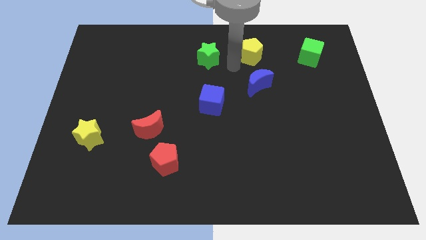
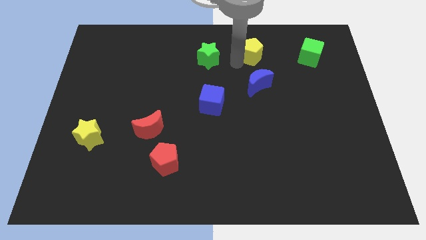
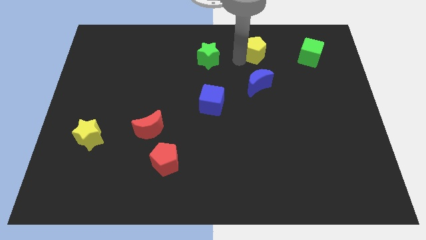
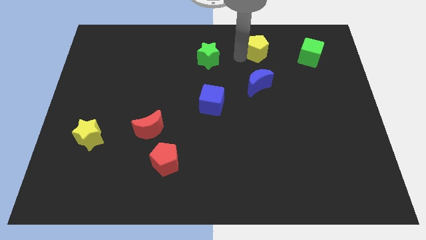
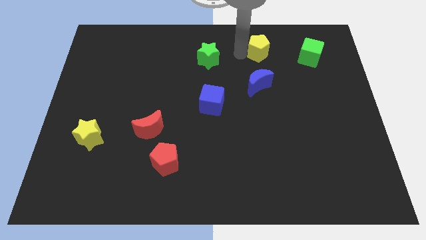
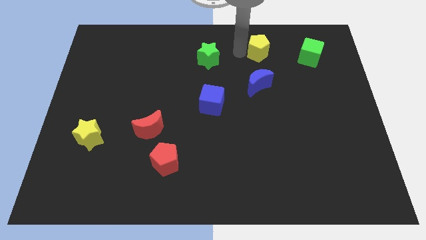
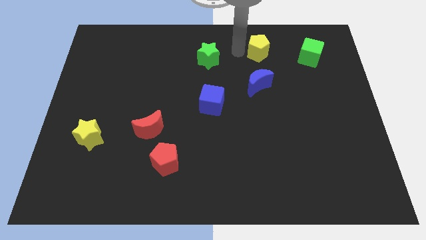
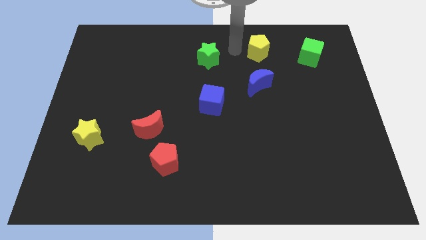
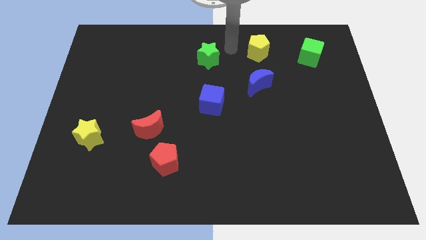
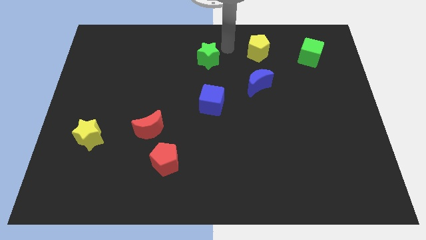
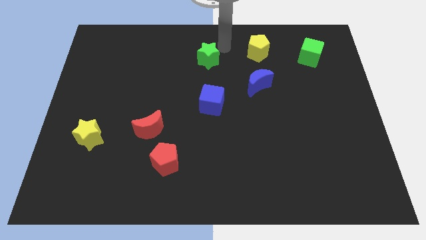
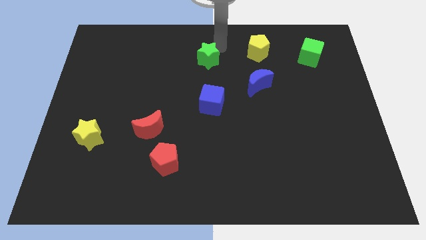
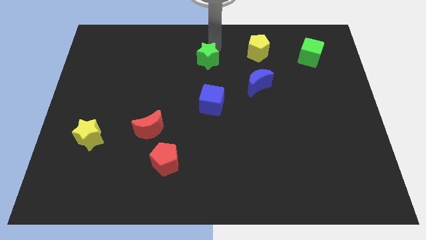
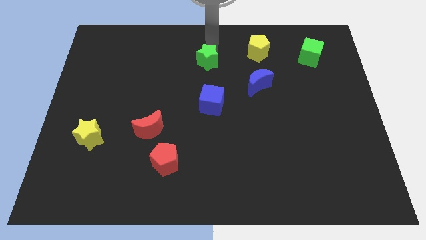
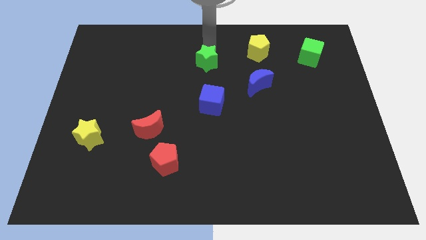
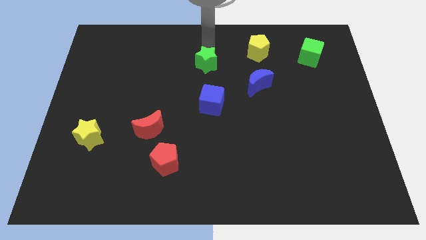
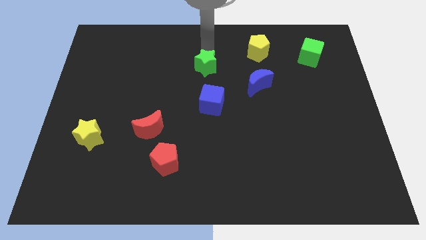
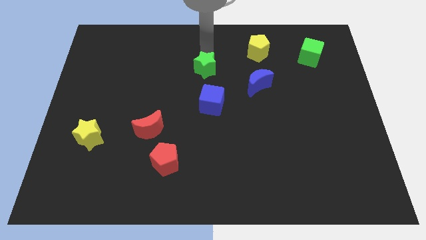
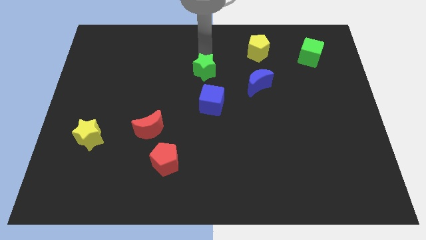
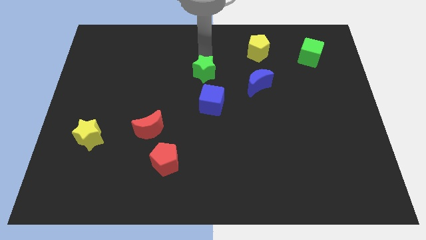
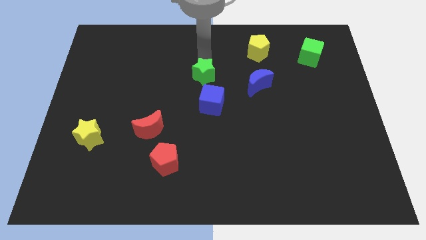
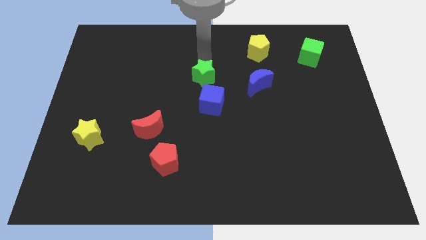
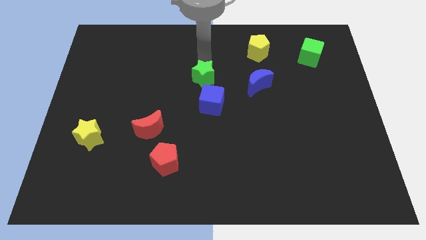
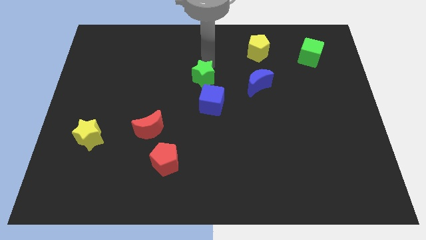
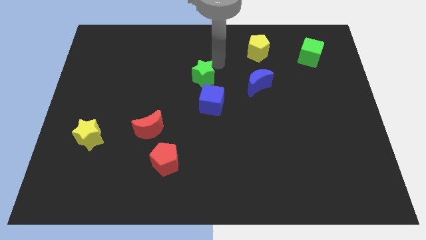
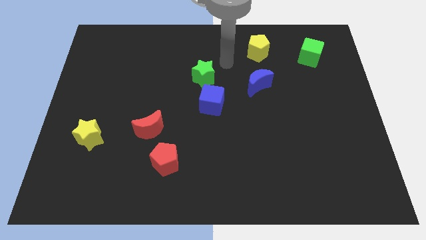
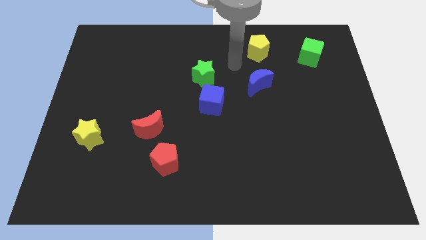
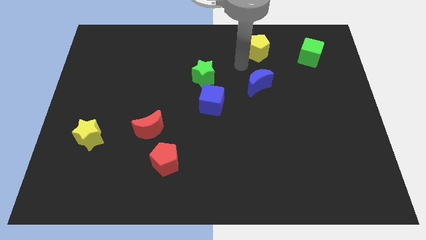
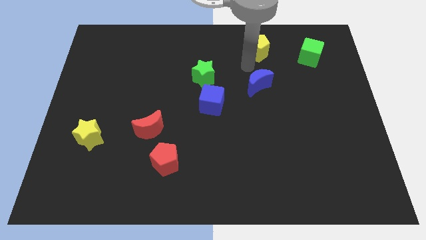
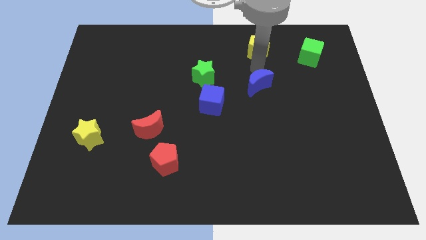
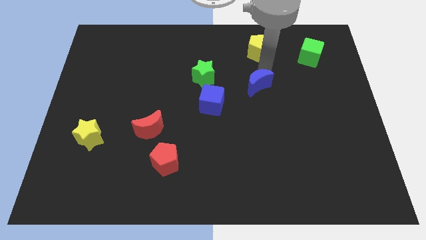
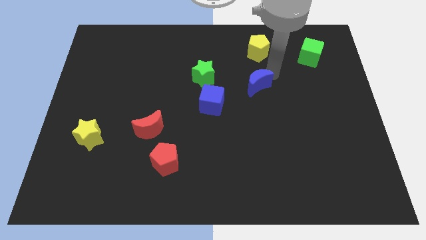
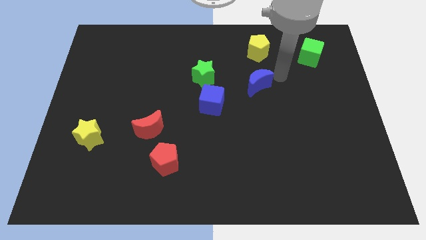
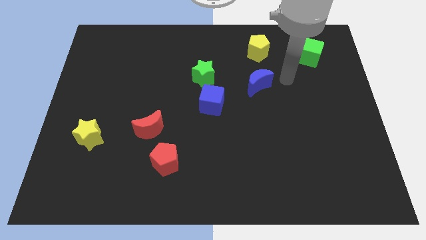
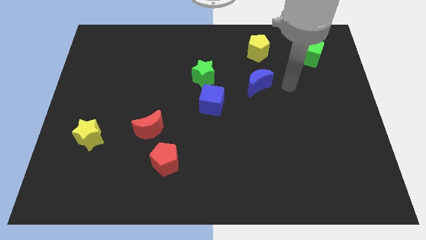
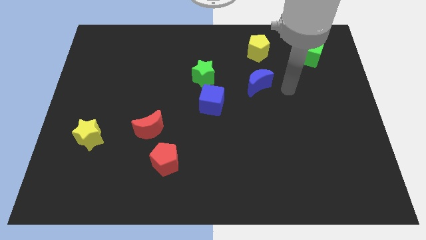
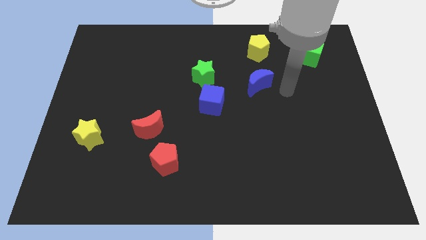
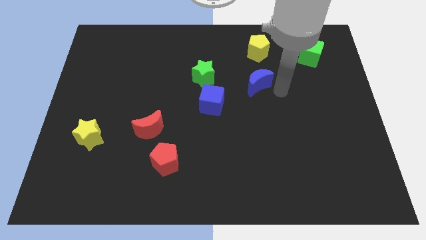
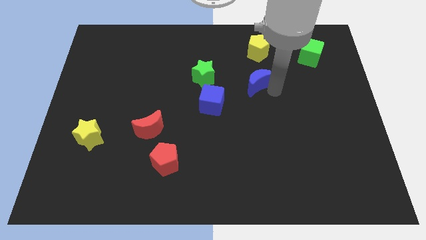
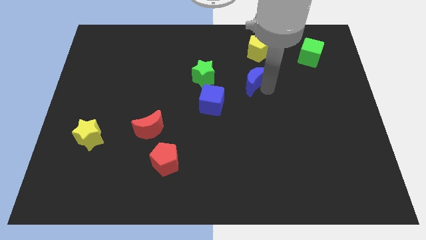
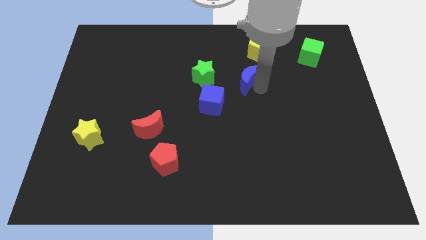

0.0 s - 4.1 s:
move the green star towards the blue cube on the center of the board

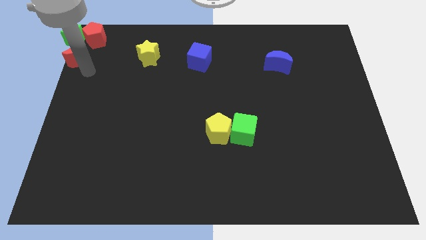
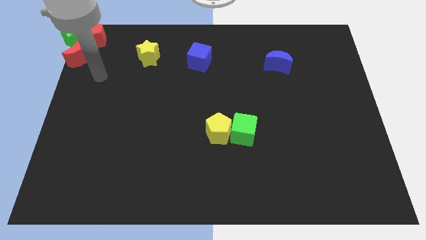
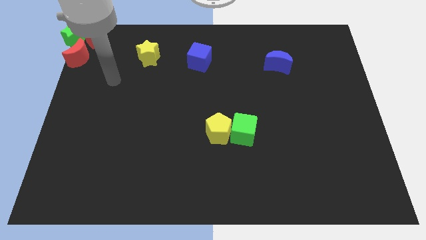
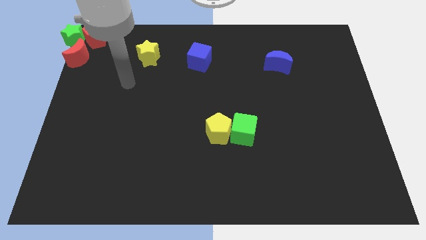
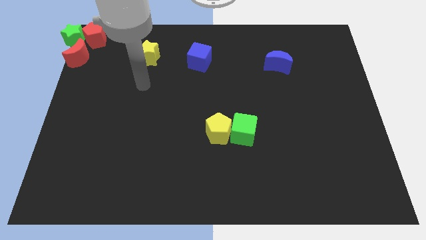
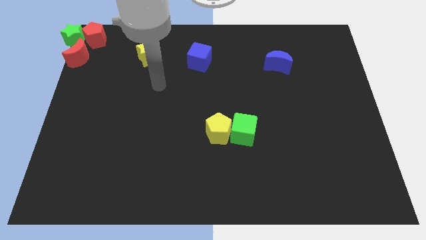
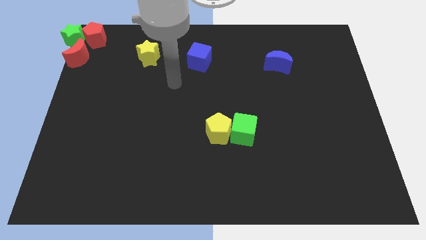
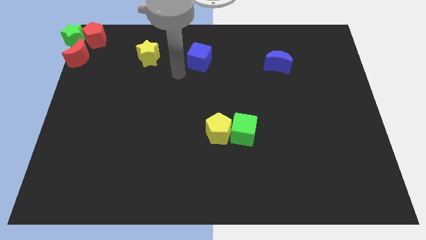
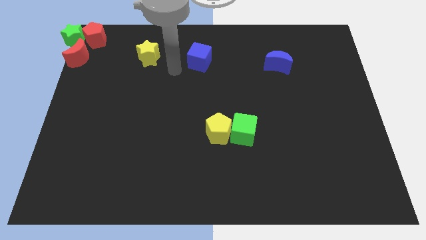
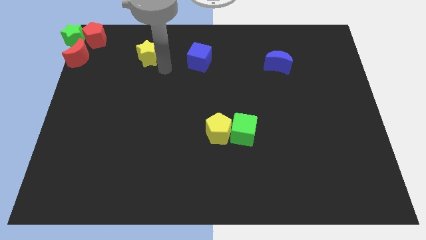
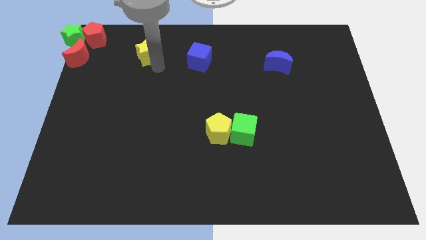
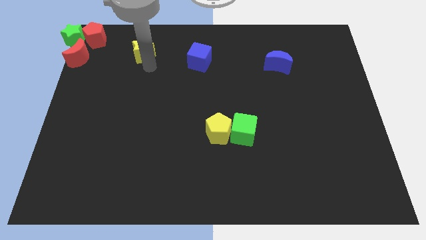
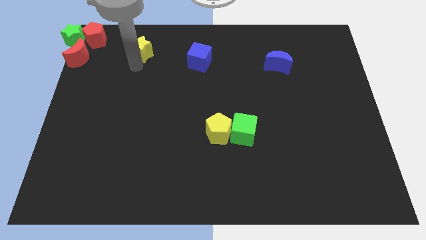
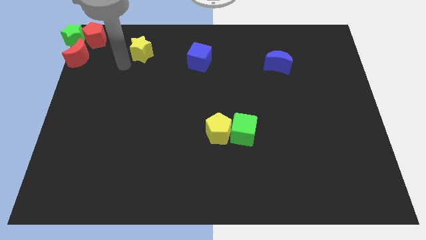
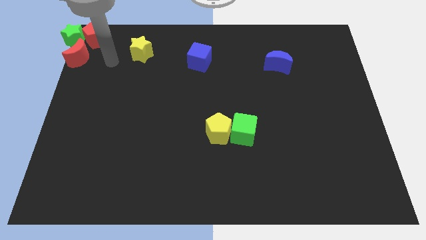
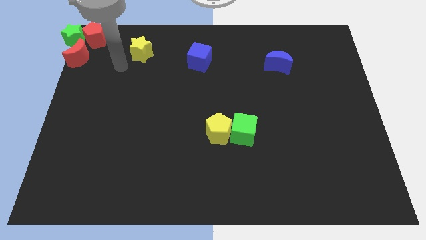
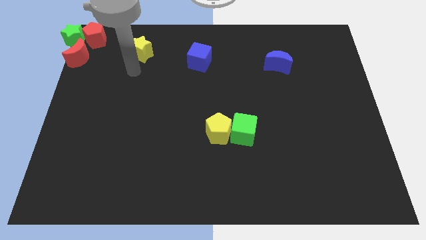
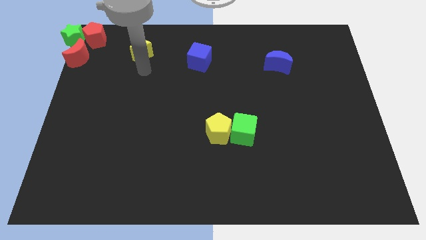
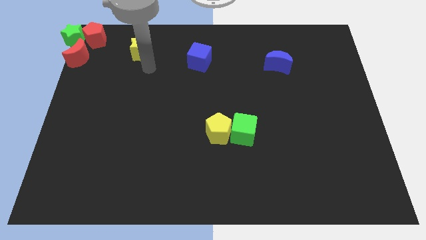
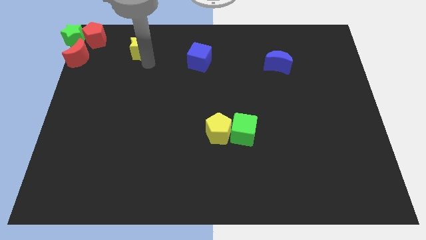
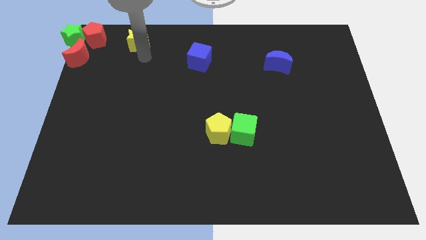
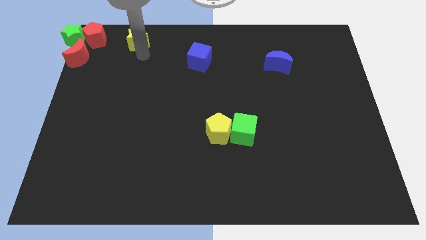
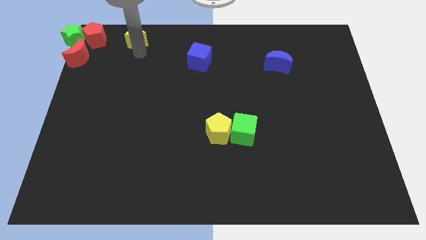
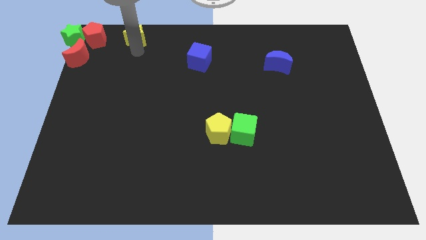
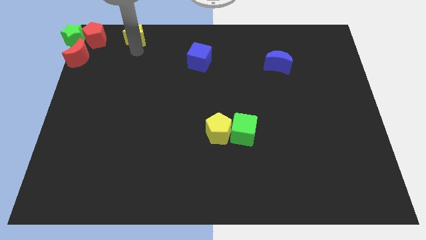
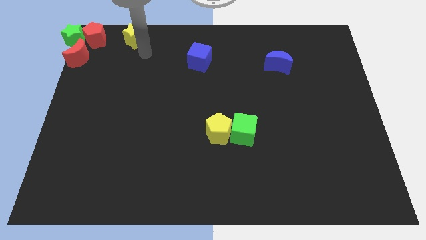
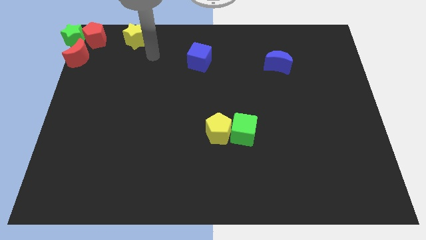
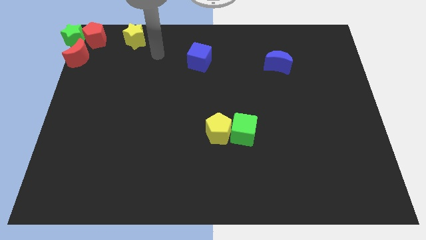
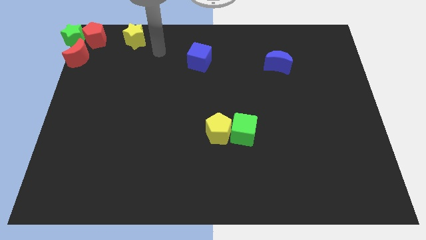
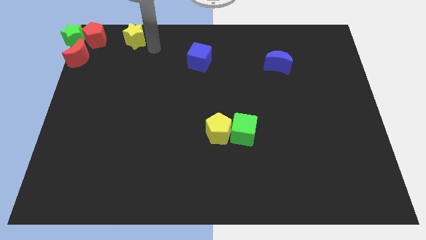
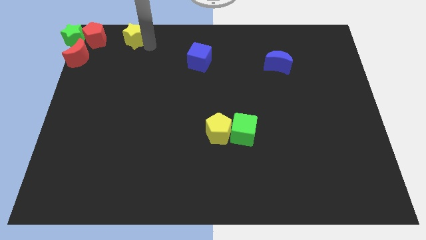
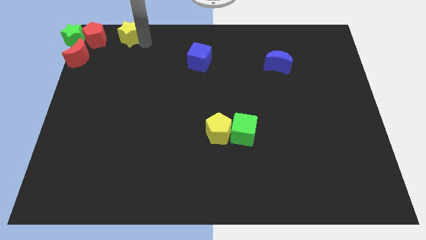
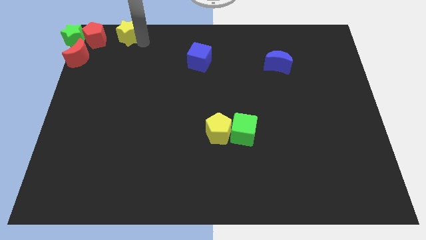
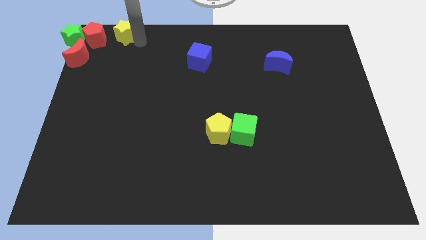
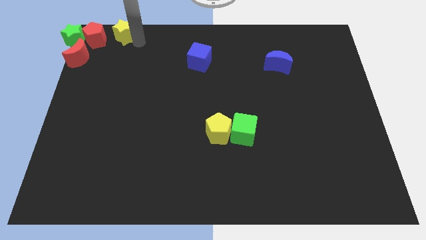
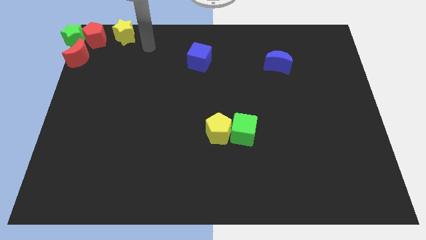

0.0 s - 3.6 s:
push the yellow star to the right of the red pentagon

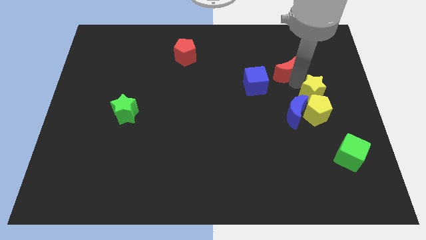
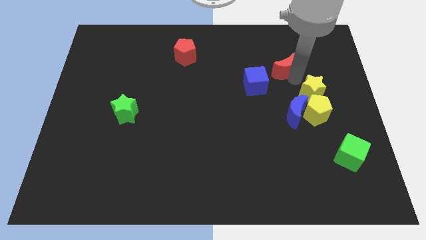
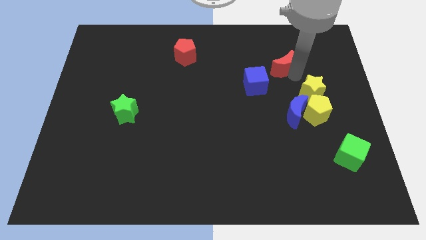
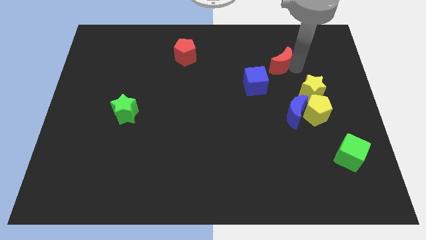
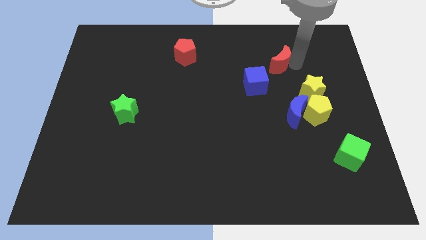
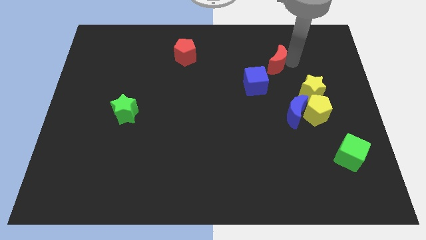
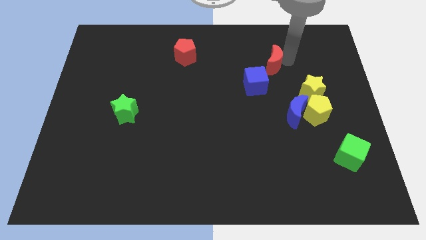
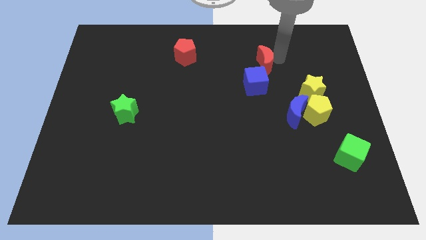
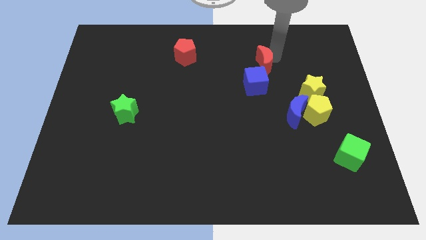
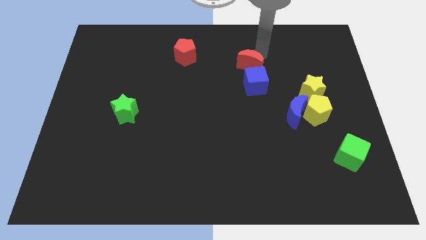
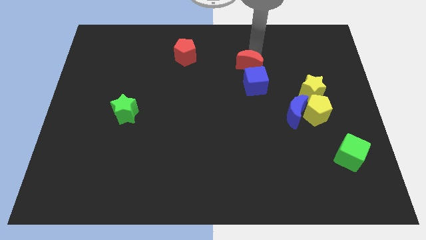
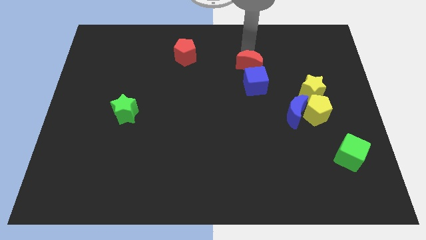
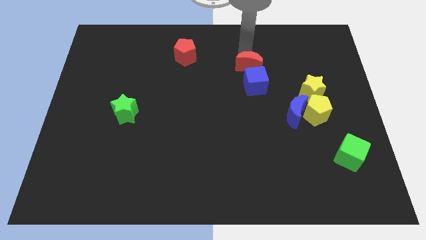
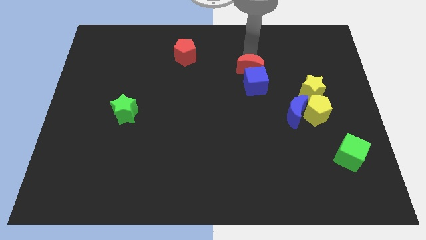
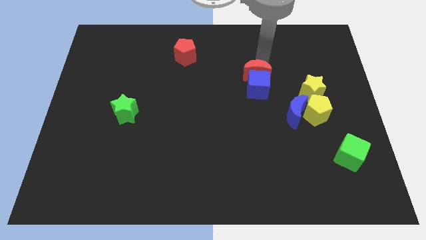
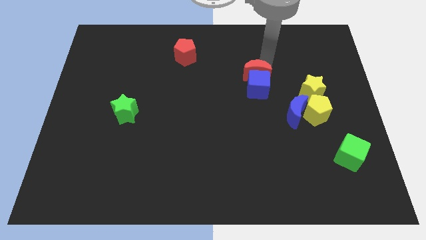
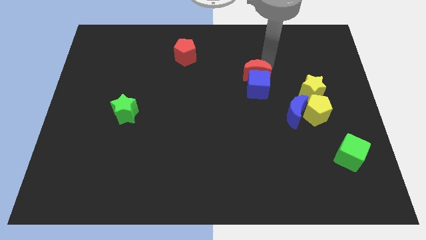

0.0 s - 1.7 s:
place red moon above blue cube
